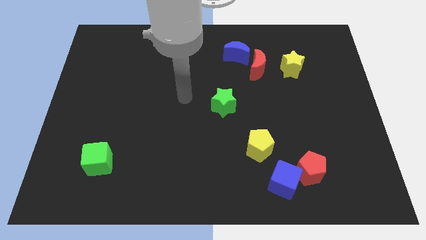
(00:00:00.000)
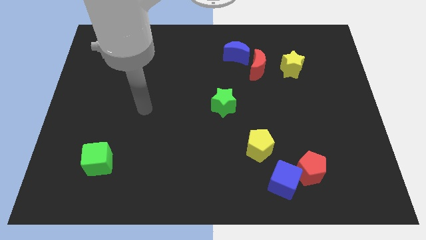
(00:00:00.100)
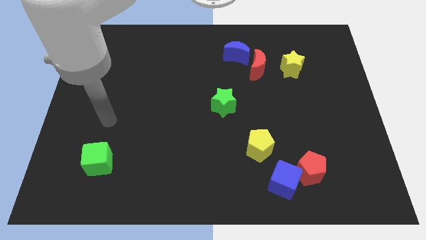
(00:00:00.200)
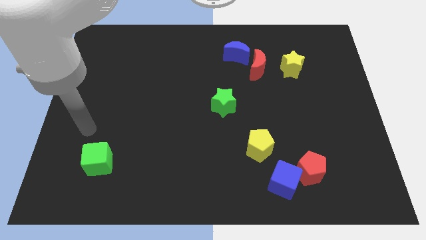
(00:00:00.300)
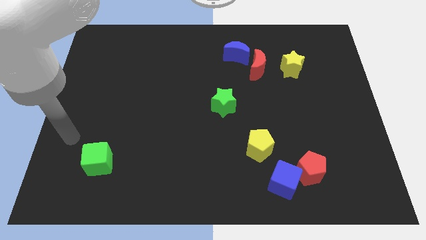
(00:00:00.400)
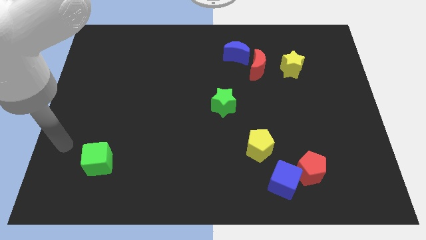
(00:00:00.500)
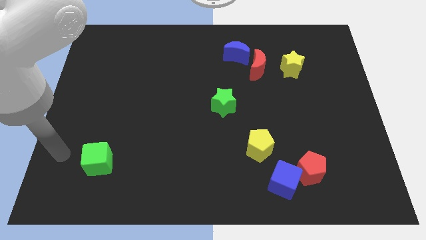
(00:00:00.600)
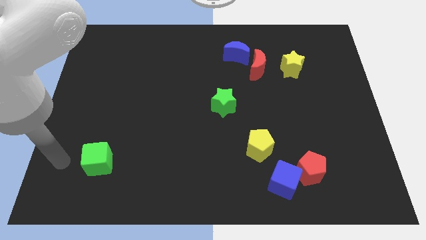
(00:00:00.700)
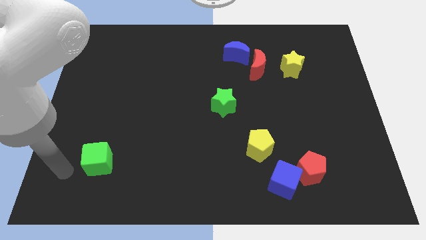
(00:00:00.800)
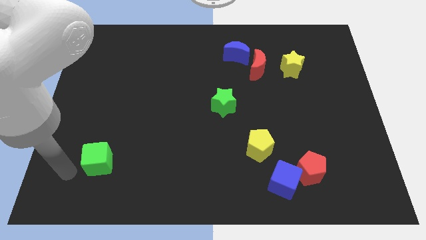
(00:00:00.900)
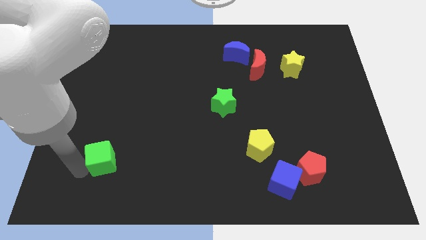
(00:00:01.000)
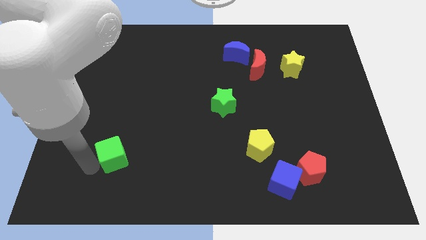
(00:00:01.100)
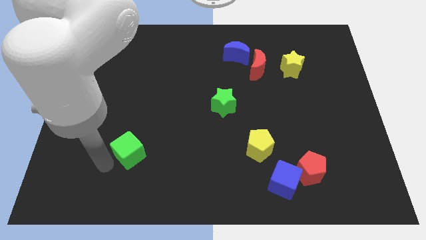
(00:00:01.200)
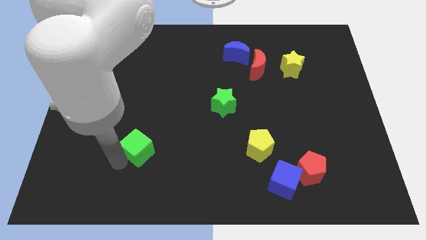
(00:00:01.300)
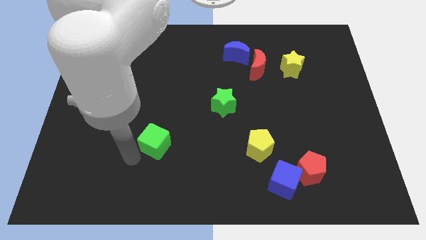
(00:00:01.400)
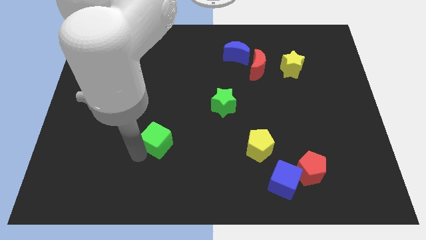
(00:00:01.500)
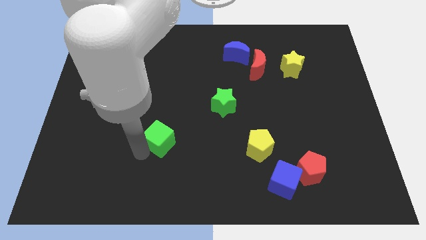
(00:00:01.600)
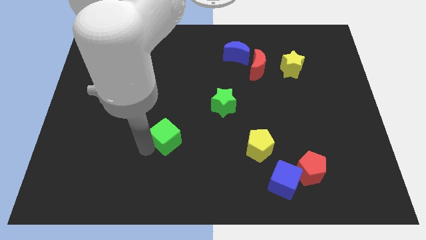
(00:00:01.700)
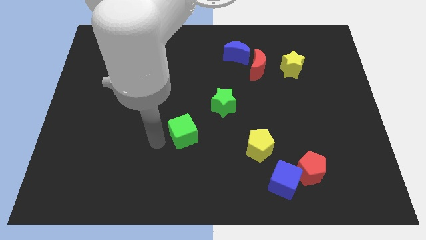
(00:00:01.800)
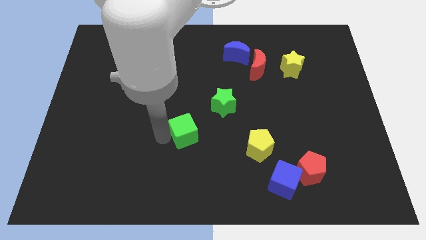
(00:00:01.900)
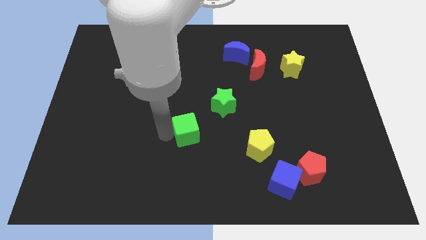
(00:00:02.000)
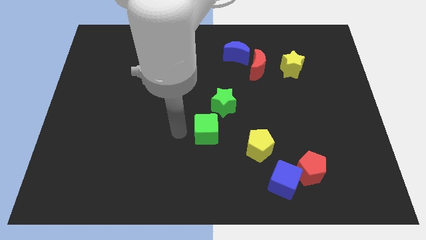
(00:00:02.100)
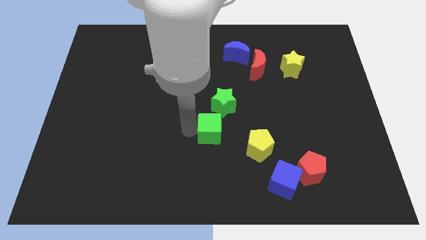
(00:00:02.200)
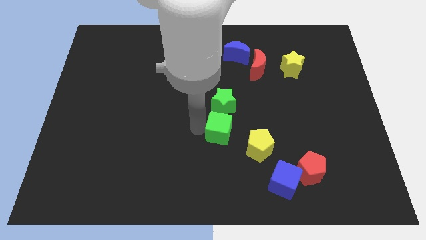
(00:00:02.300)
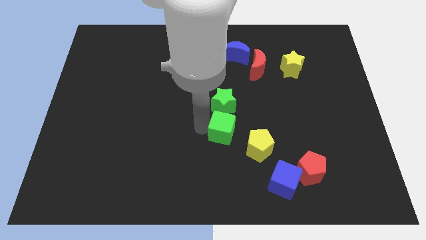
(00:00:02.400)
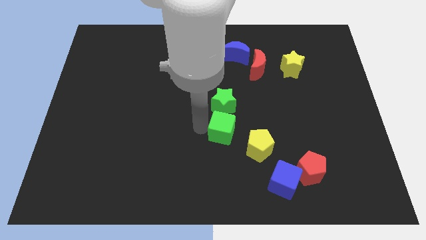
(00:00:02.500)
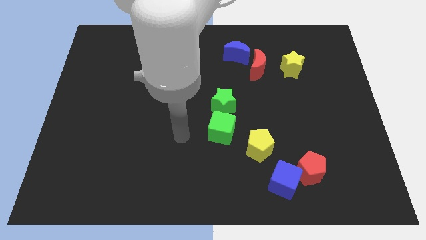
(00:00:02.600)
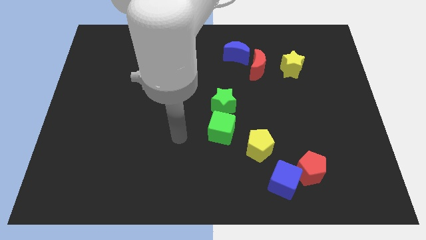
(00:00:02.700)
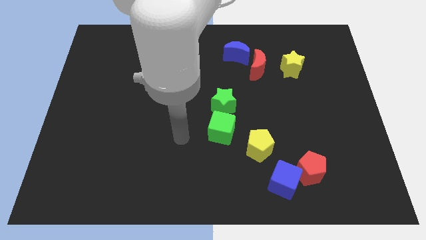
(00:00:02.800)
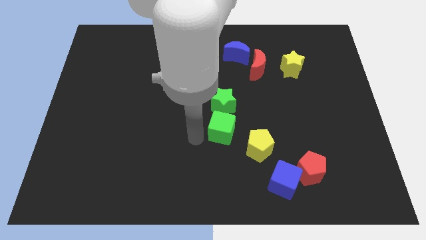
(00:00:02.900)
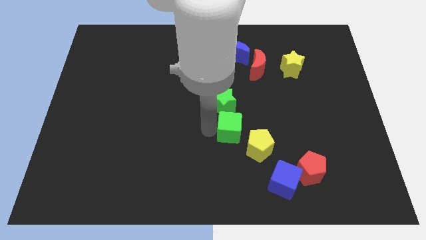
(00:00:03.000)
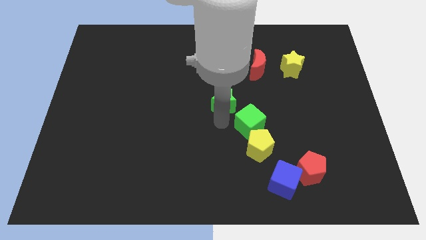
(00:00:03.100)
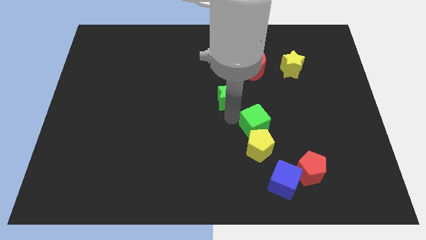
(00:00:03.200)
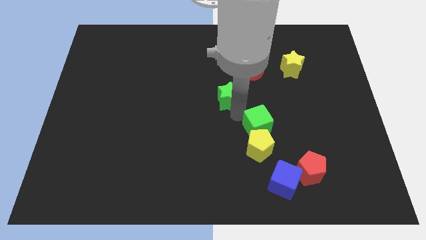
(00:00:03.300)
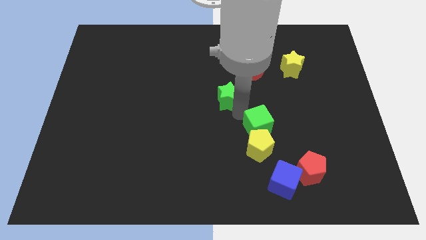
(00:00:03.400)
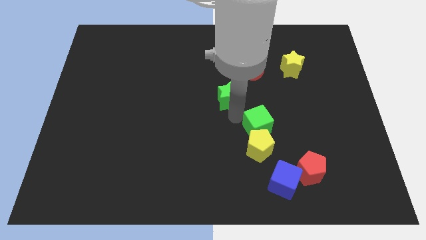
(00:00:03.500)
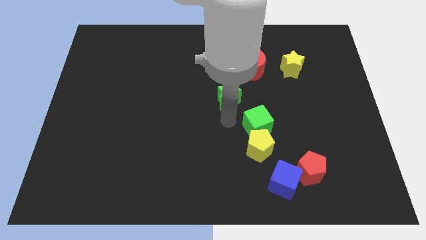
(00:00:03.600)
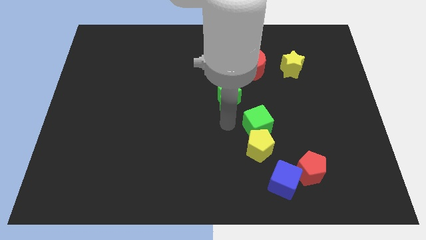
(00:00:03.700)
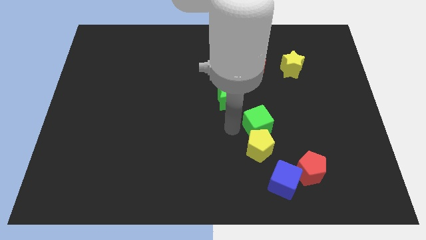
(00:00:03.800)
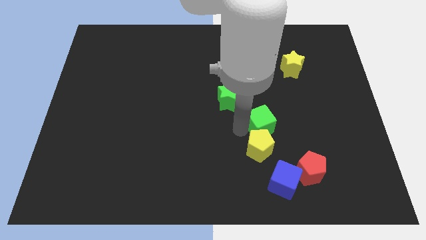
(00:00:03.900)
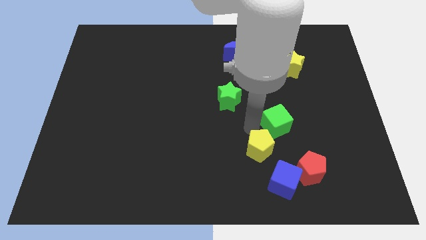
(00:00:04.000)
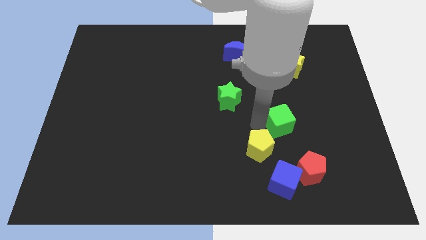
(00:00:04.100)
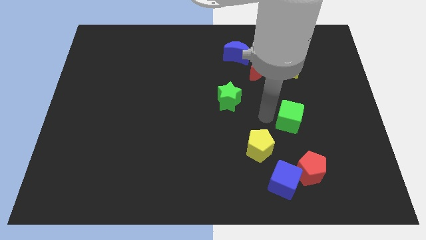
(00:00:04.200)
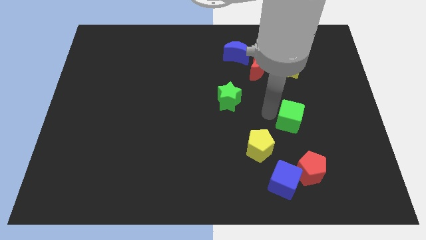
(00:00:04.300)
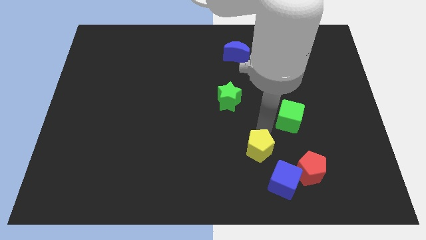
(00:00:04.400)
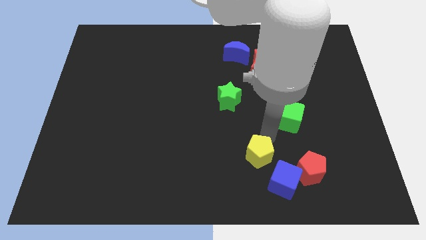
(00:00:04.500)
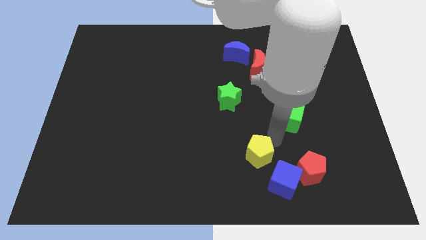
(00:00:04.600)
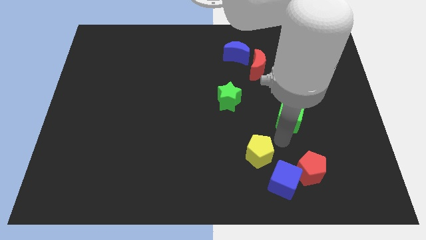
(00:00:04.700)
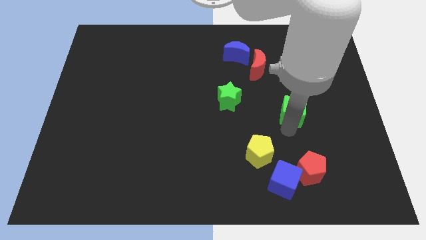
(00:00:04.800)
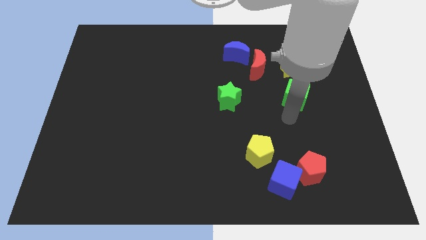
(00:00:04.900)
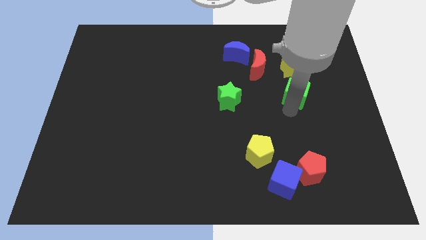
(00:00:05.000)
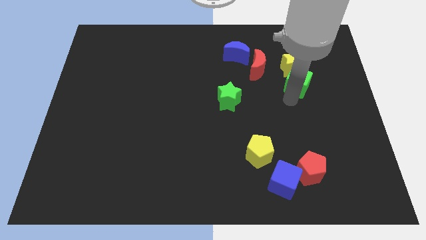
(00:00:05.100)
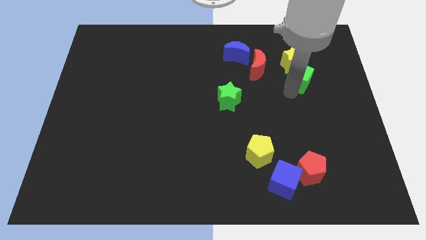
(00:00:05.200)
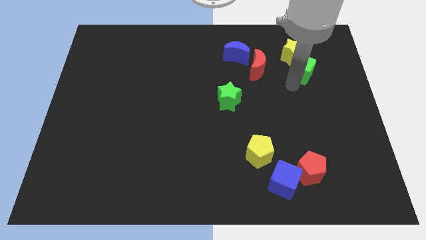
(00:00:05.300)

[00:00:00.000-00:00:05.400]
move the green cube to the yellow star

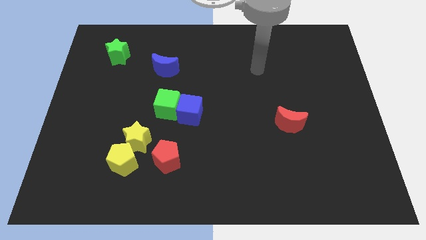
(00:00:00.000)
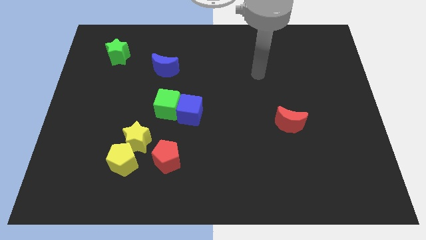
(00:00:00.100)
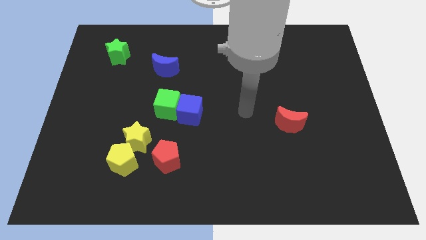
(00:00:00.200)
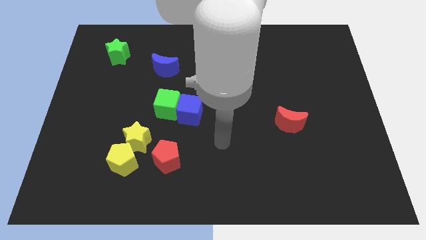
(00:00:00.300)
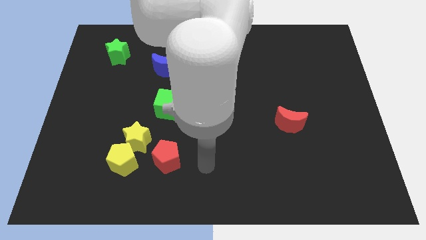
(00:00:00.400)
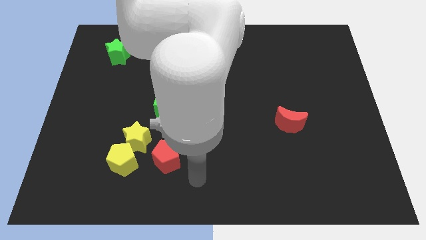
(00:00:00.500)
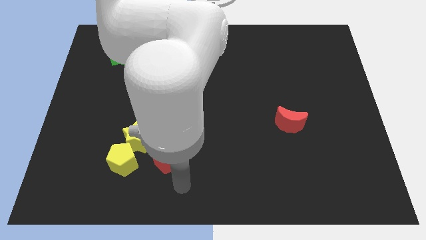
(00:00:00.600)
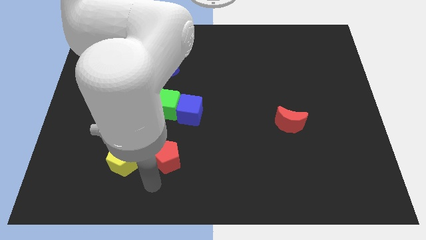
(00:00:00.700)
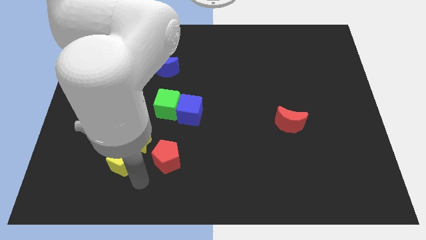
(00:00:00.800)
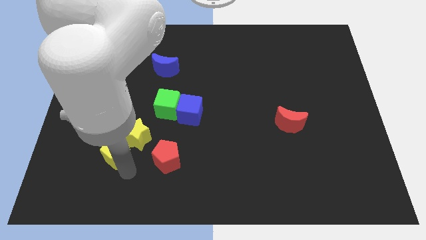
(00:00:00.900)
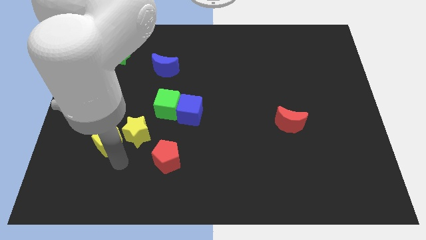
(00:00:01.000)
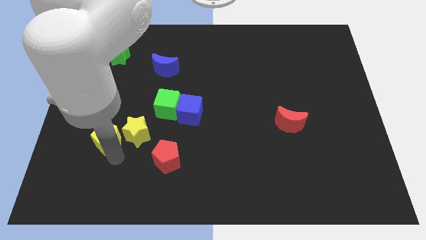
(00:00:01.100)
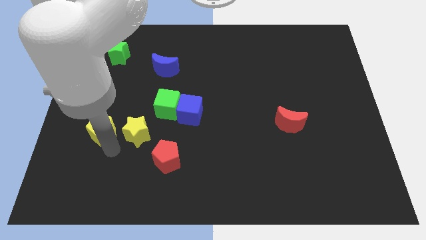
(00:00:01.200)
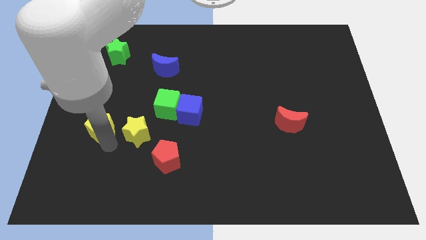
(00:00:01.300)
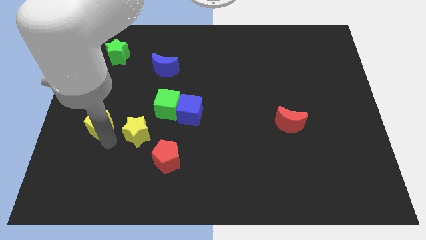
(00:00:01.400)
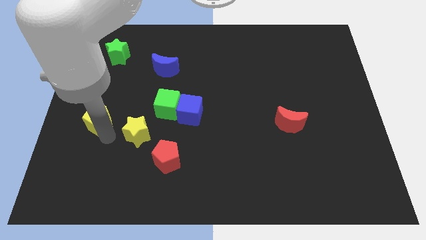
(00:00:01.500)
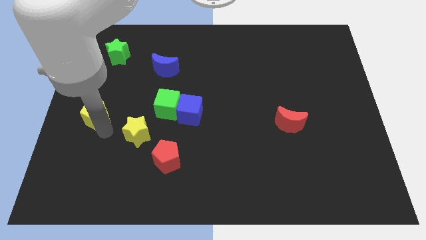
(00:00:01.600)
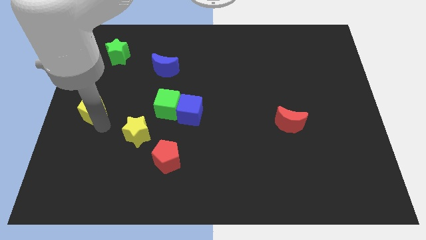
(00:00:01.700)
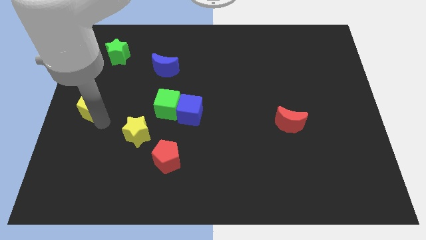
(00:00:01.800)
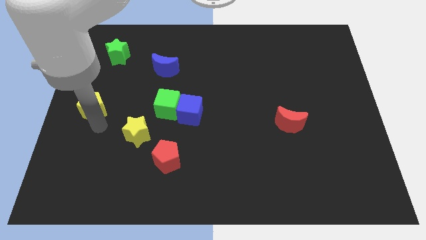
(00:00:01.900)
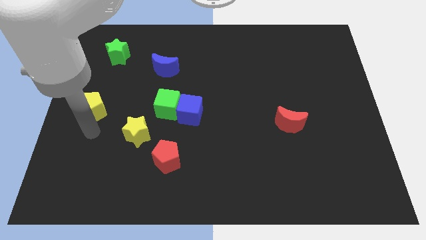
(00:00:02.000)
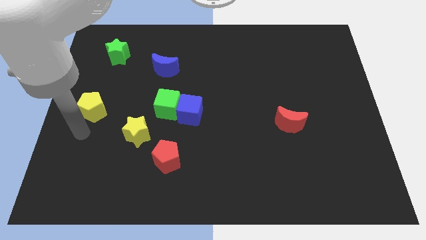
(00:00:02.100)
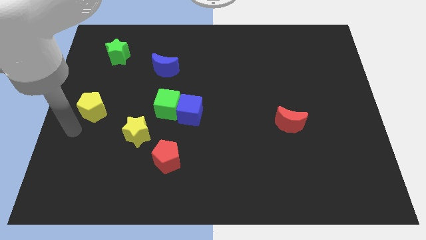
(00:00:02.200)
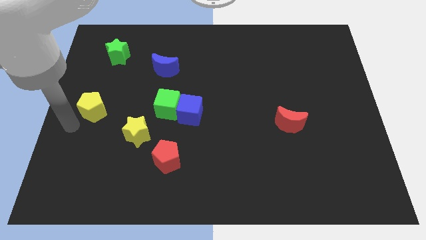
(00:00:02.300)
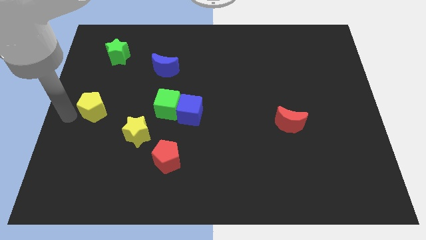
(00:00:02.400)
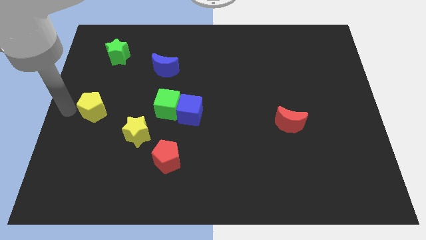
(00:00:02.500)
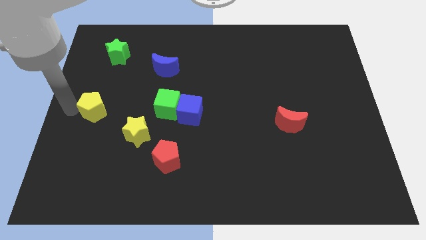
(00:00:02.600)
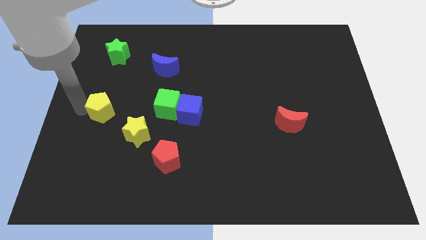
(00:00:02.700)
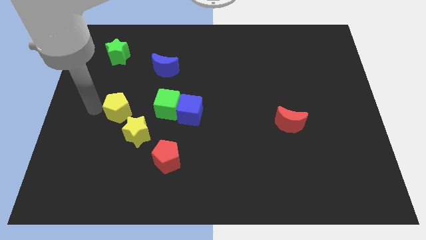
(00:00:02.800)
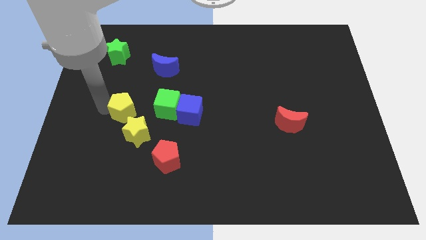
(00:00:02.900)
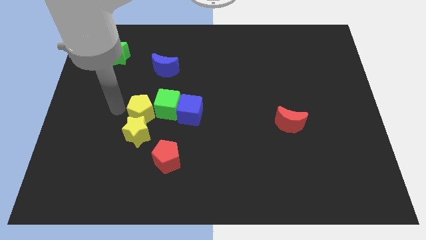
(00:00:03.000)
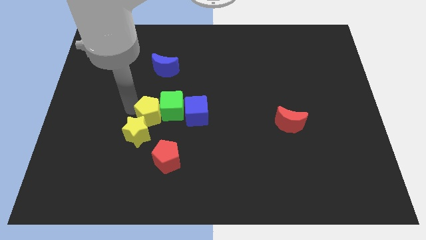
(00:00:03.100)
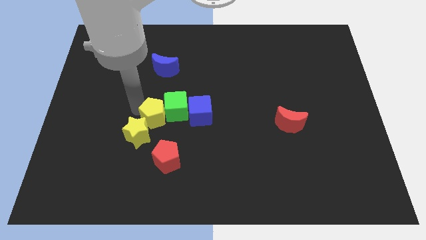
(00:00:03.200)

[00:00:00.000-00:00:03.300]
put the yellow pentagon close to the green cube
